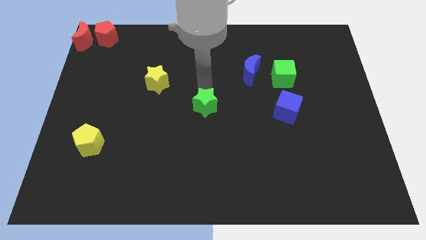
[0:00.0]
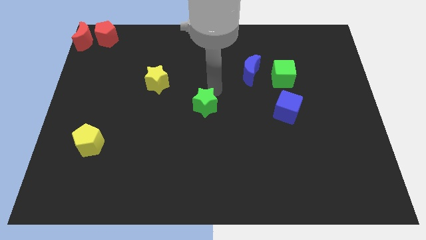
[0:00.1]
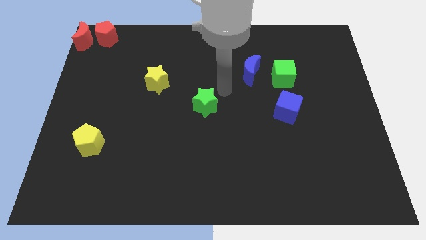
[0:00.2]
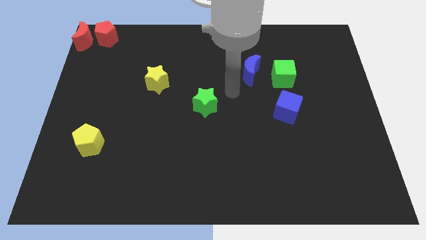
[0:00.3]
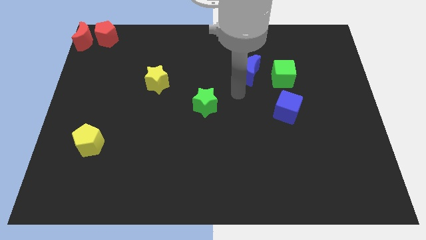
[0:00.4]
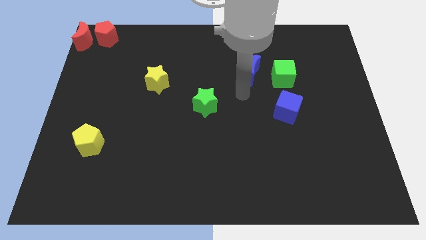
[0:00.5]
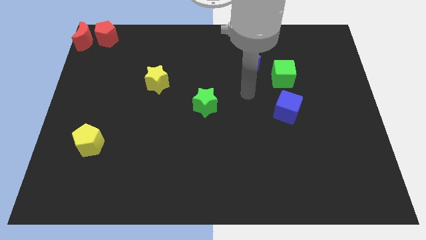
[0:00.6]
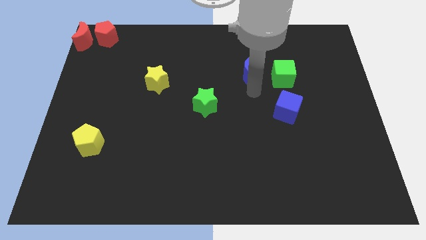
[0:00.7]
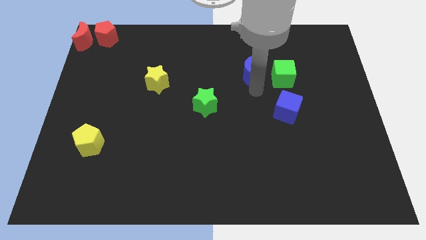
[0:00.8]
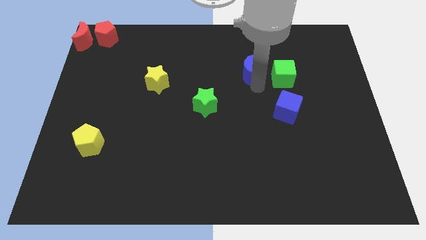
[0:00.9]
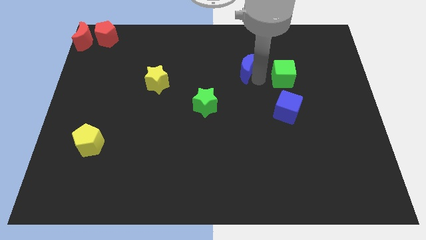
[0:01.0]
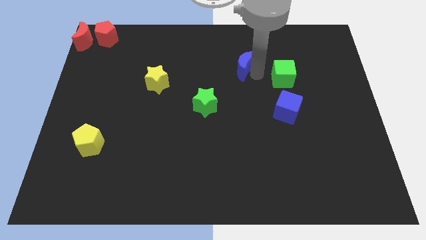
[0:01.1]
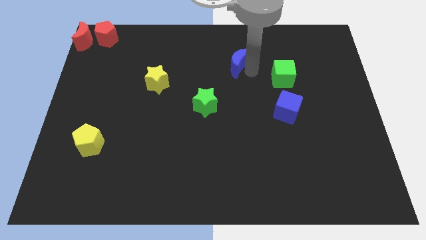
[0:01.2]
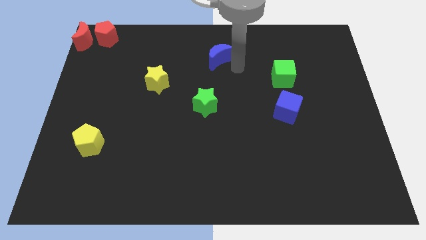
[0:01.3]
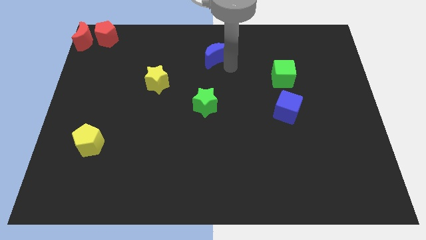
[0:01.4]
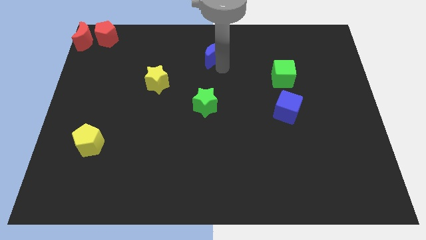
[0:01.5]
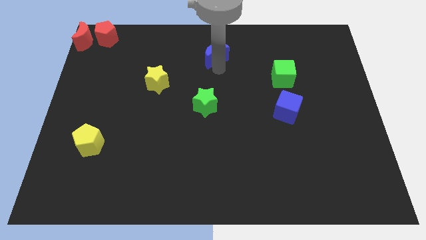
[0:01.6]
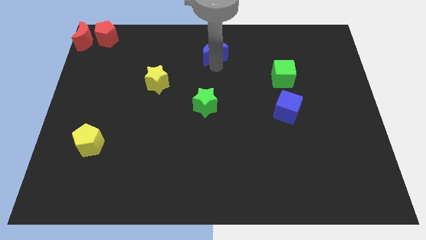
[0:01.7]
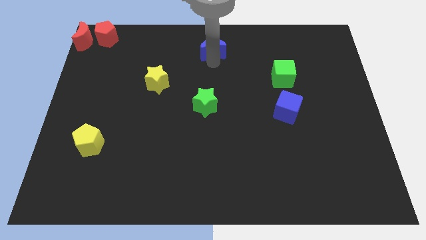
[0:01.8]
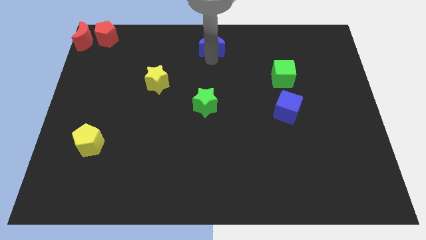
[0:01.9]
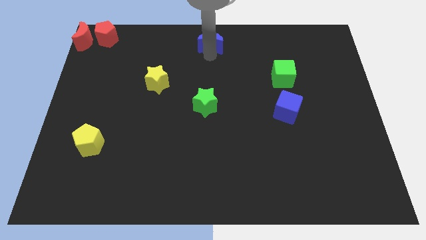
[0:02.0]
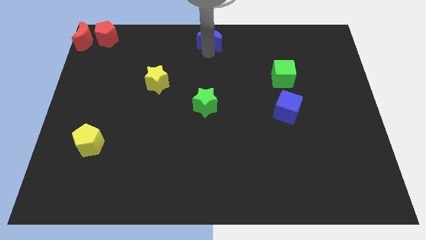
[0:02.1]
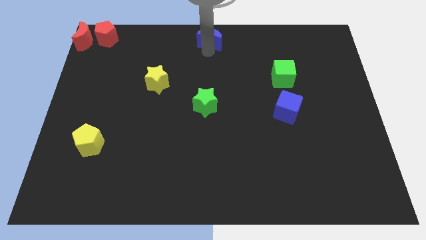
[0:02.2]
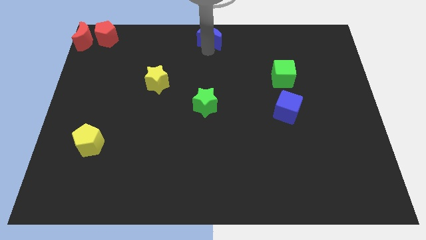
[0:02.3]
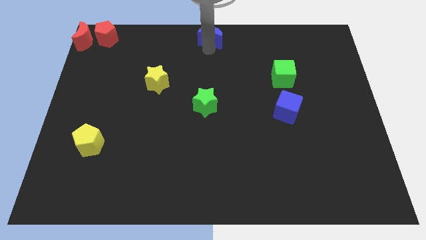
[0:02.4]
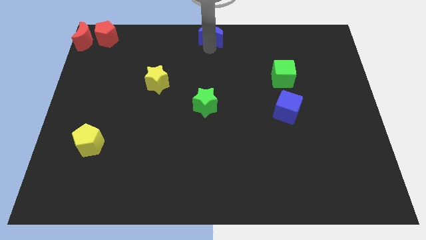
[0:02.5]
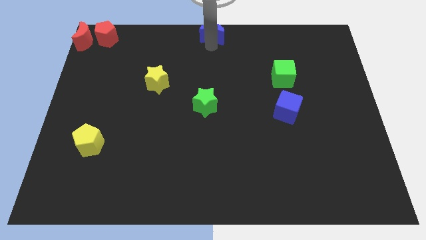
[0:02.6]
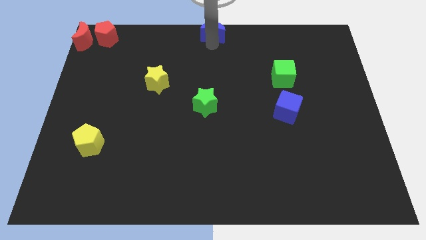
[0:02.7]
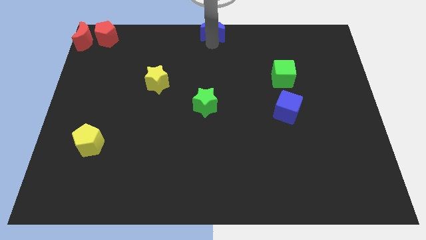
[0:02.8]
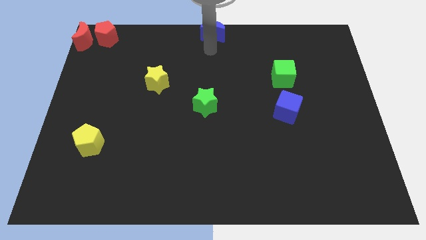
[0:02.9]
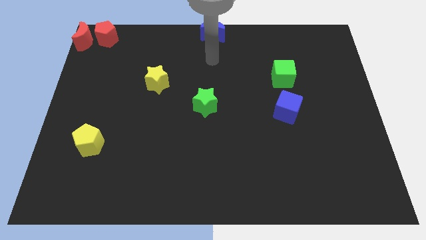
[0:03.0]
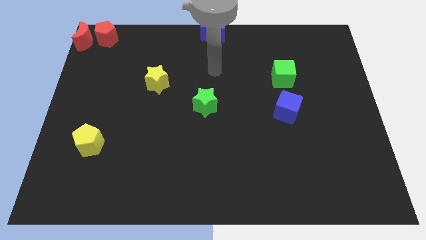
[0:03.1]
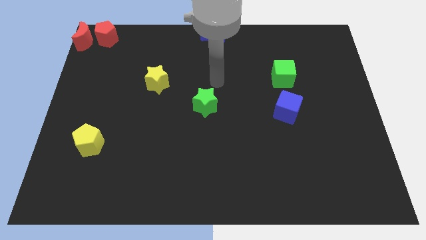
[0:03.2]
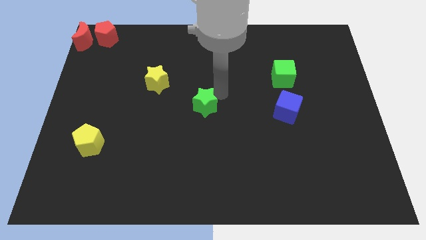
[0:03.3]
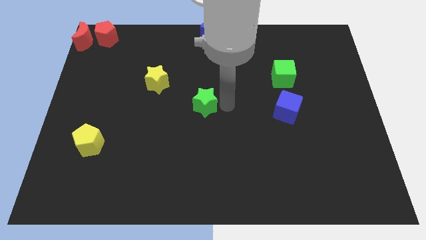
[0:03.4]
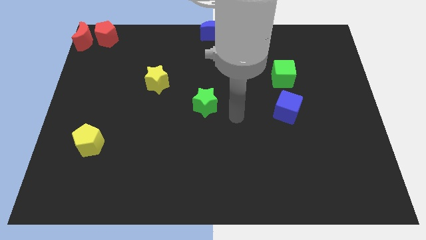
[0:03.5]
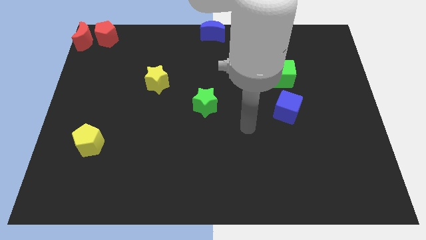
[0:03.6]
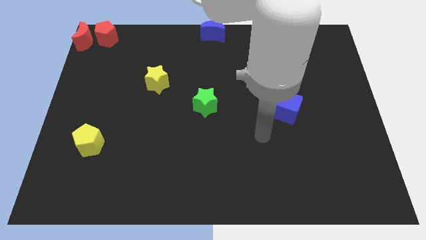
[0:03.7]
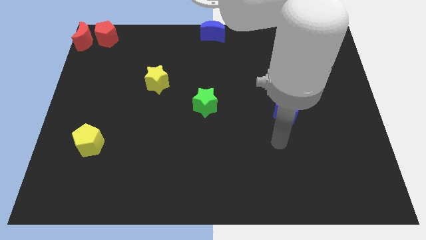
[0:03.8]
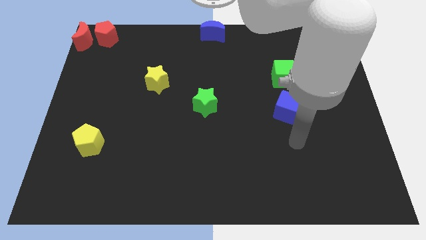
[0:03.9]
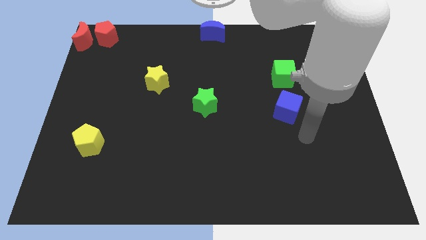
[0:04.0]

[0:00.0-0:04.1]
move the blue crescent to the top center of the board

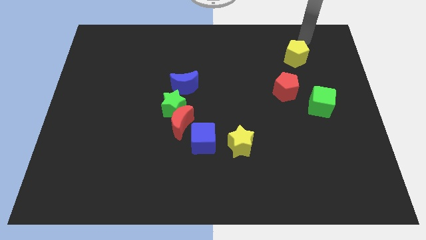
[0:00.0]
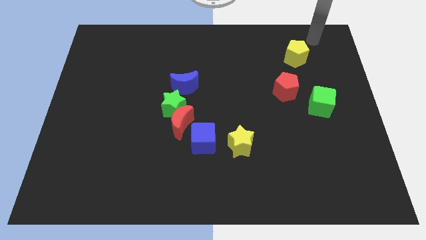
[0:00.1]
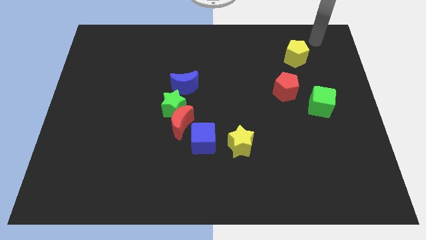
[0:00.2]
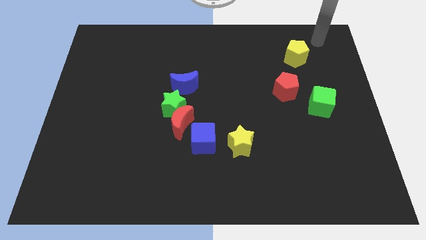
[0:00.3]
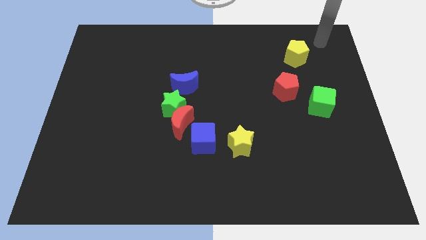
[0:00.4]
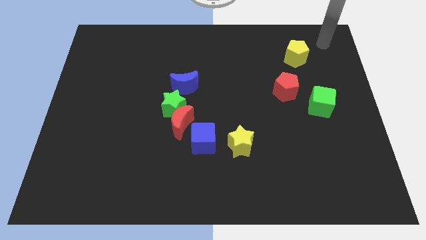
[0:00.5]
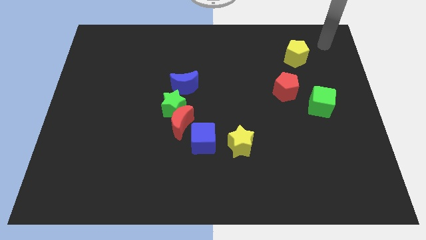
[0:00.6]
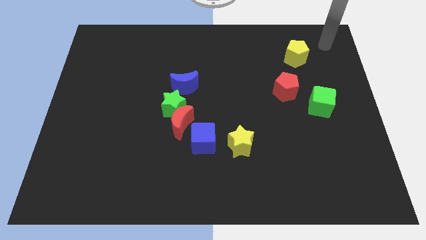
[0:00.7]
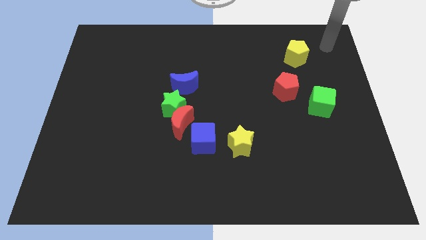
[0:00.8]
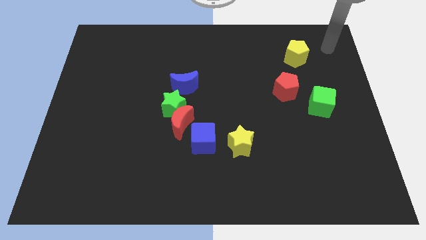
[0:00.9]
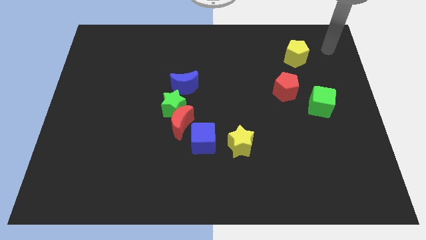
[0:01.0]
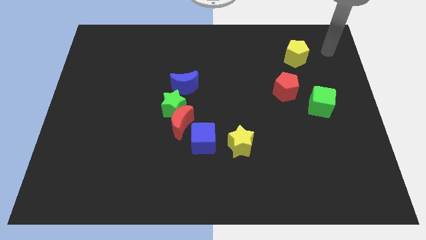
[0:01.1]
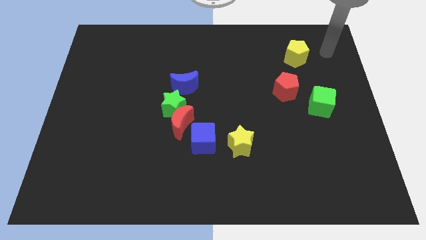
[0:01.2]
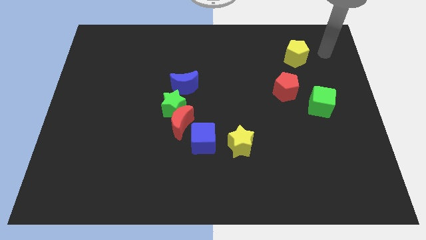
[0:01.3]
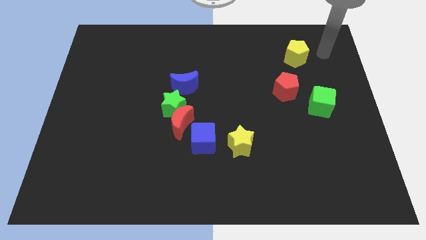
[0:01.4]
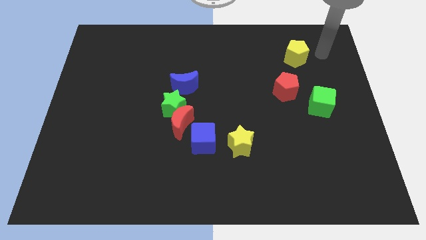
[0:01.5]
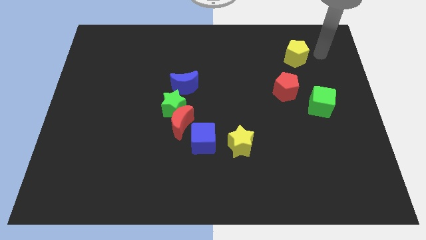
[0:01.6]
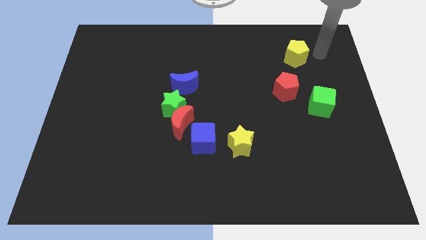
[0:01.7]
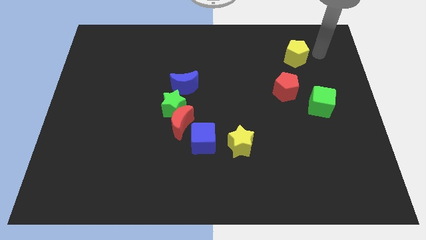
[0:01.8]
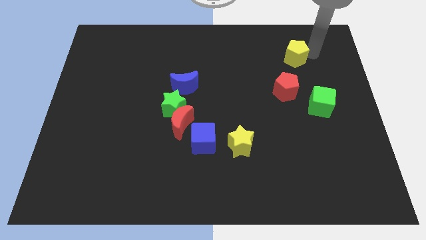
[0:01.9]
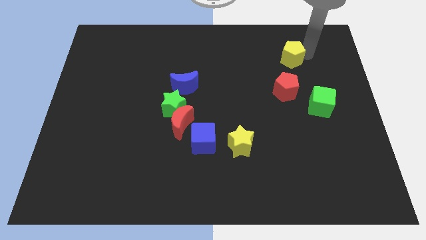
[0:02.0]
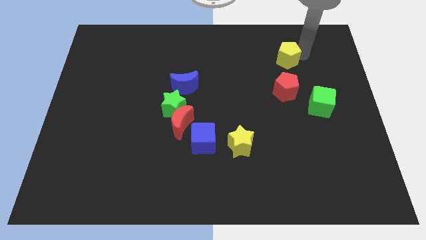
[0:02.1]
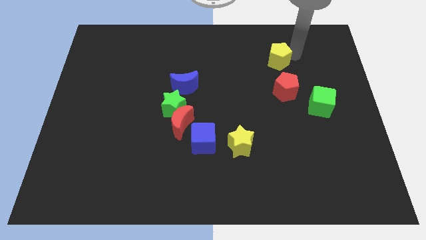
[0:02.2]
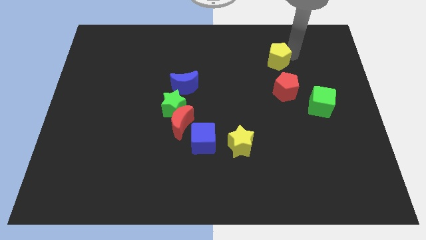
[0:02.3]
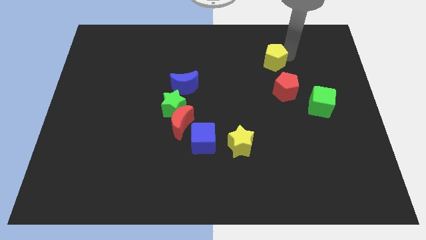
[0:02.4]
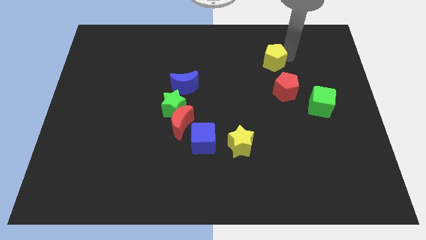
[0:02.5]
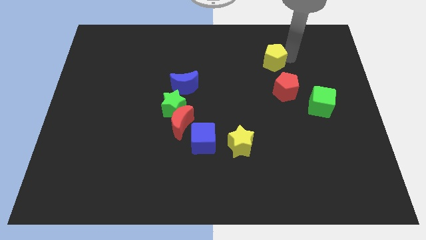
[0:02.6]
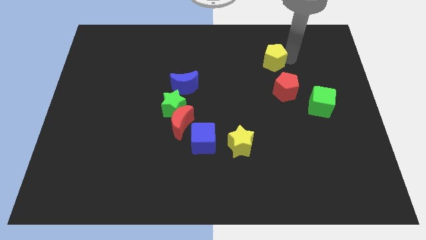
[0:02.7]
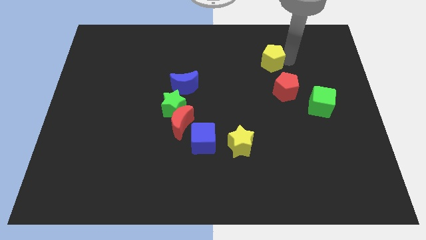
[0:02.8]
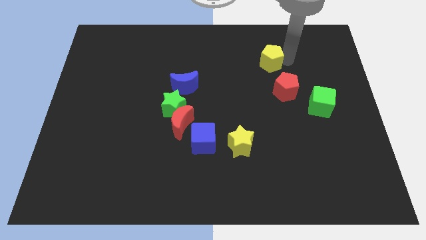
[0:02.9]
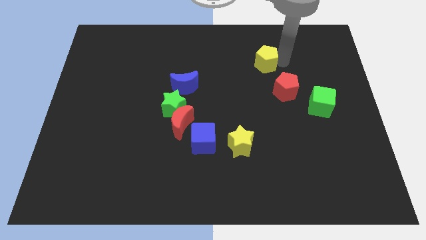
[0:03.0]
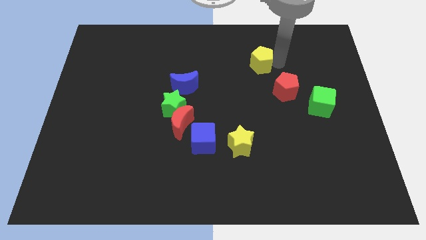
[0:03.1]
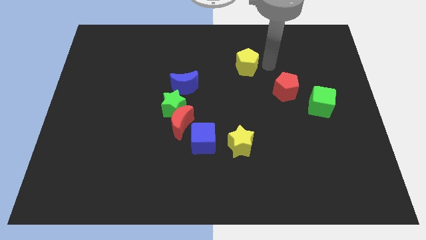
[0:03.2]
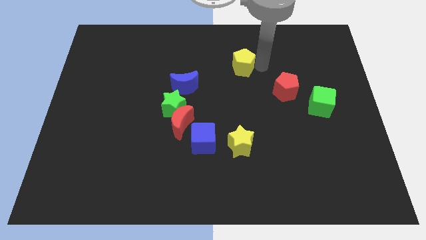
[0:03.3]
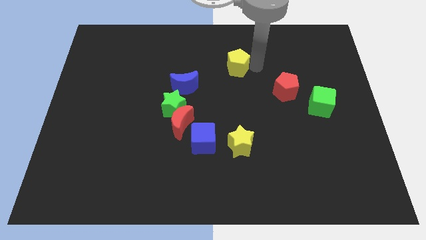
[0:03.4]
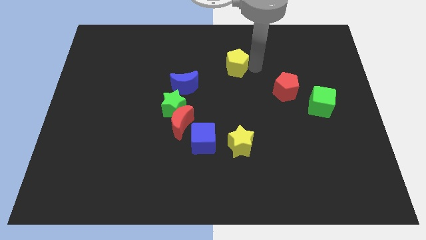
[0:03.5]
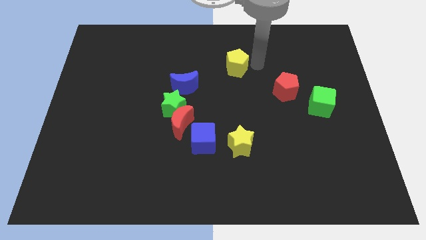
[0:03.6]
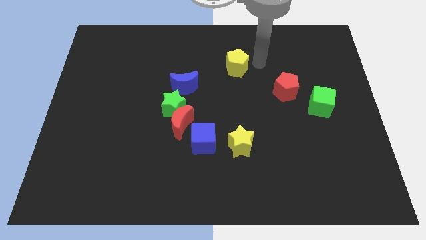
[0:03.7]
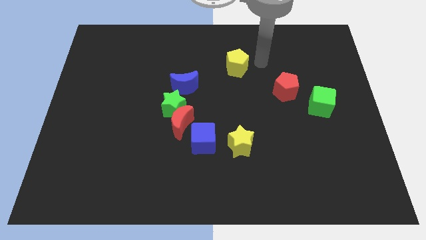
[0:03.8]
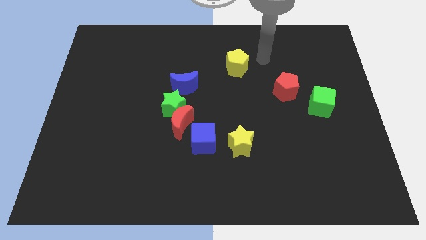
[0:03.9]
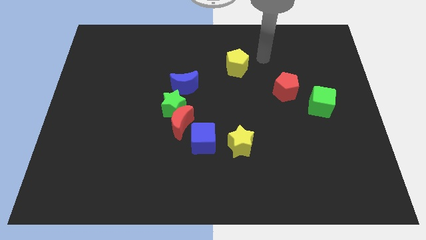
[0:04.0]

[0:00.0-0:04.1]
place the yellow pentagon vertically to yellow star

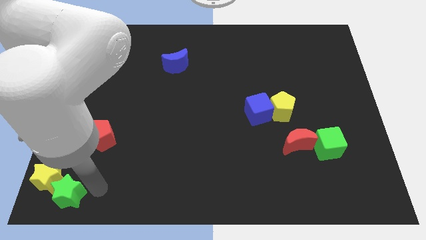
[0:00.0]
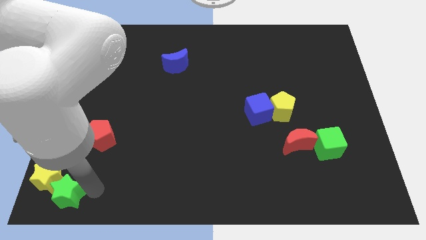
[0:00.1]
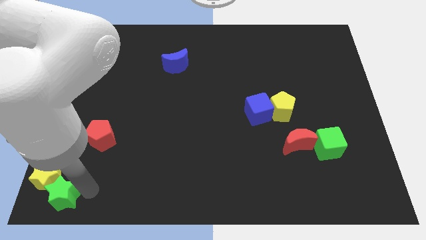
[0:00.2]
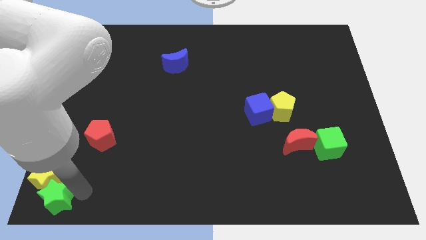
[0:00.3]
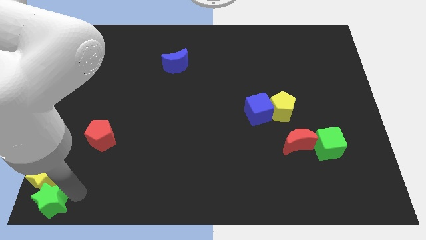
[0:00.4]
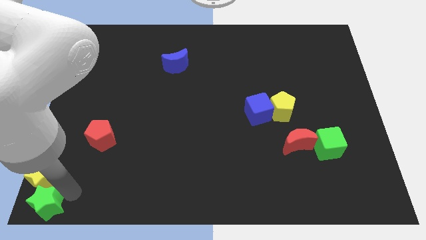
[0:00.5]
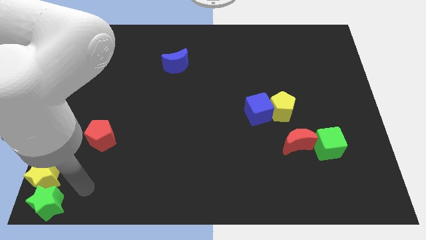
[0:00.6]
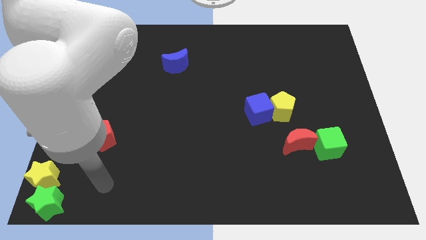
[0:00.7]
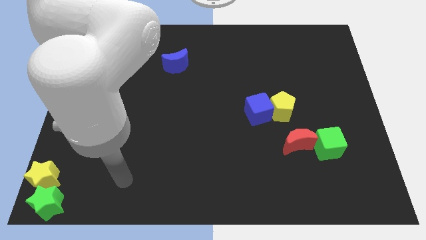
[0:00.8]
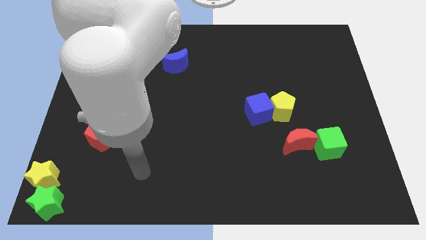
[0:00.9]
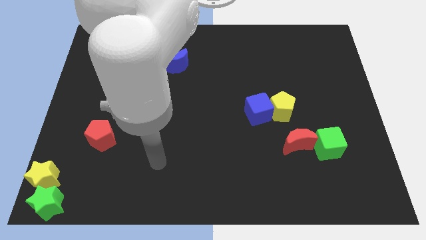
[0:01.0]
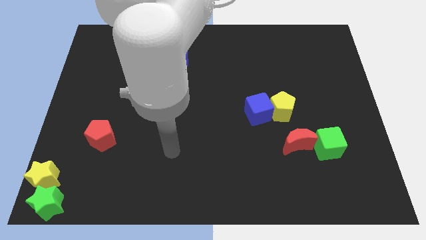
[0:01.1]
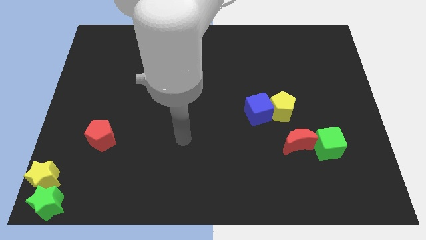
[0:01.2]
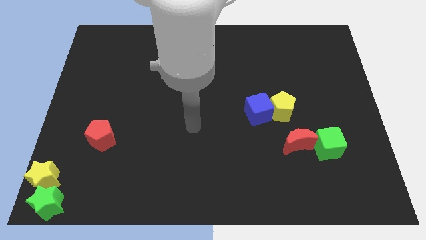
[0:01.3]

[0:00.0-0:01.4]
move green star bottom of the yellow star
